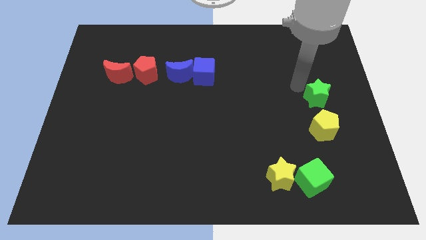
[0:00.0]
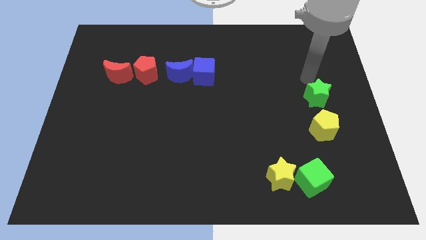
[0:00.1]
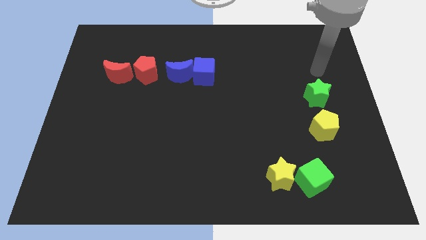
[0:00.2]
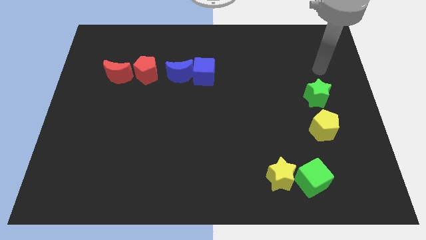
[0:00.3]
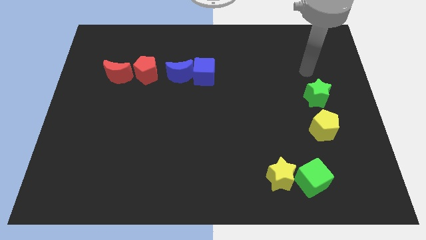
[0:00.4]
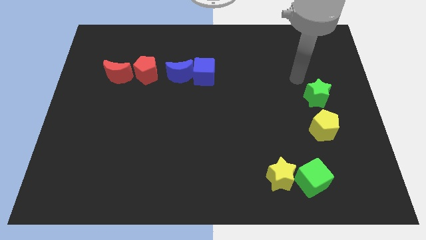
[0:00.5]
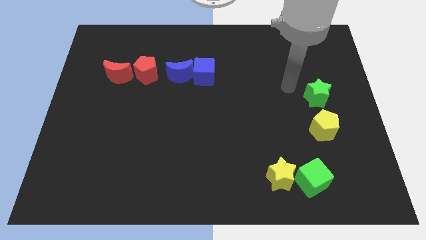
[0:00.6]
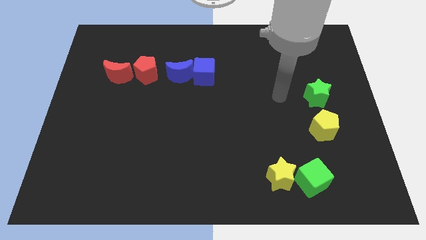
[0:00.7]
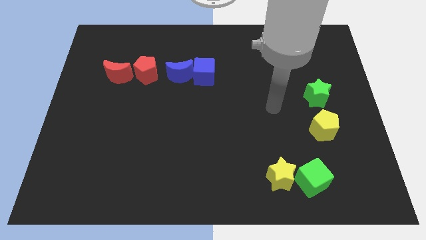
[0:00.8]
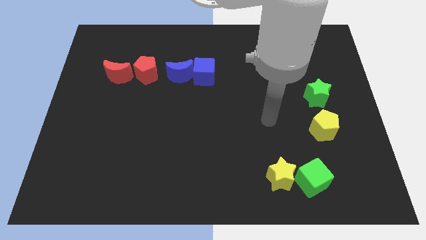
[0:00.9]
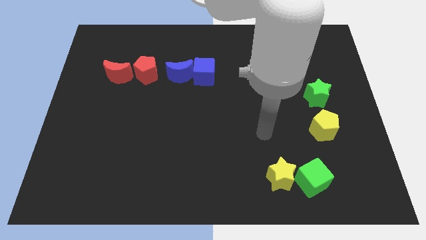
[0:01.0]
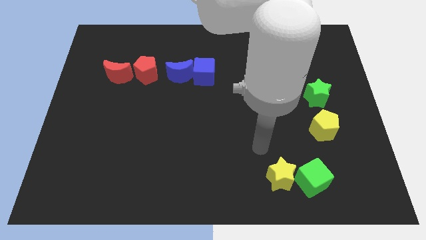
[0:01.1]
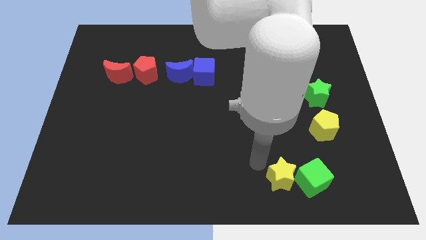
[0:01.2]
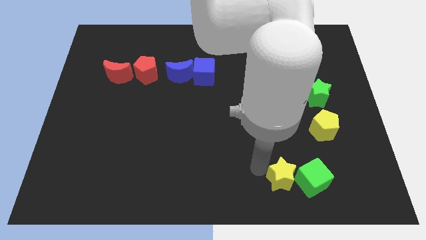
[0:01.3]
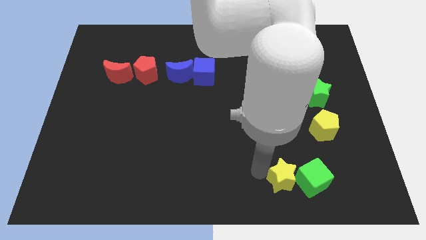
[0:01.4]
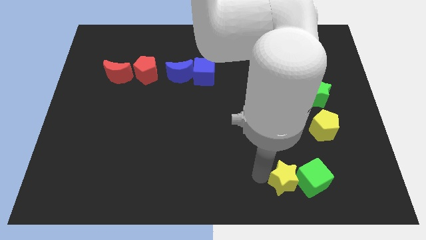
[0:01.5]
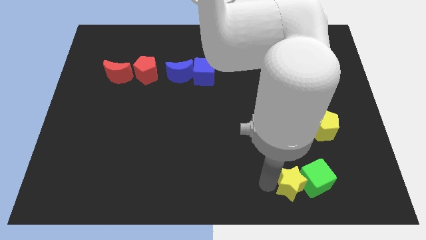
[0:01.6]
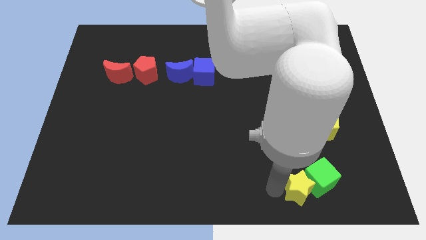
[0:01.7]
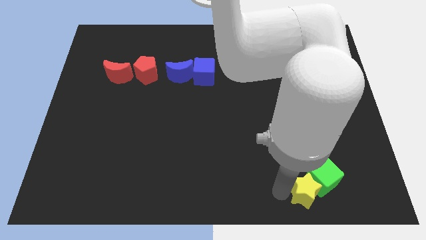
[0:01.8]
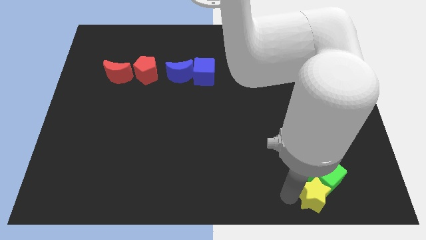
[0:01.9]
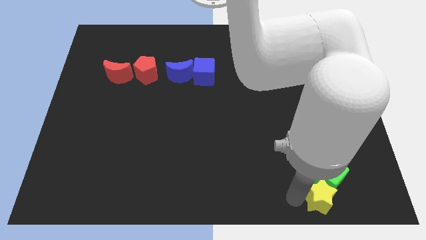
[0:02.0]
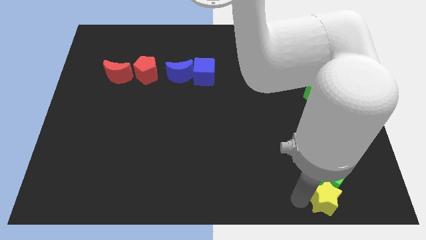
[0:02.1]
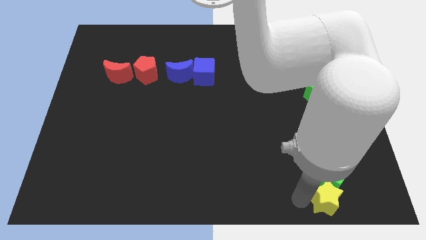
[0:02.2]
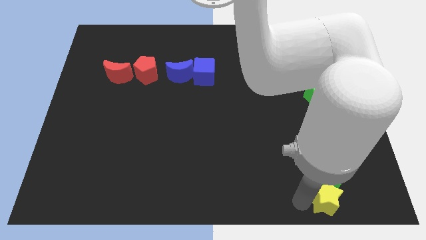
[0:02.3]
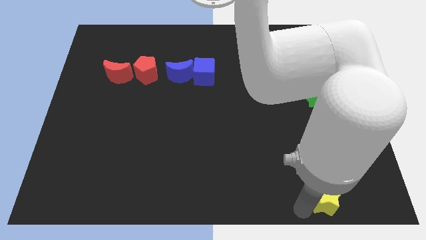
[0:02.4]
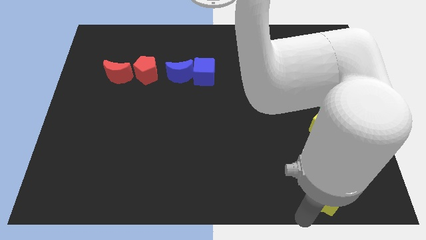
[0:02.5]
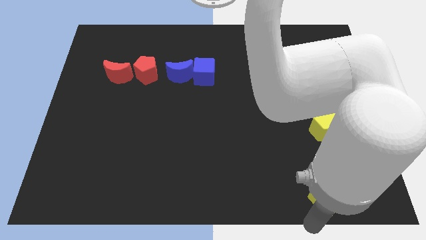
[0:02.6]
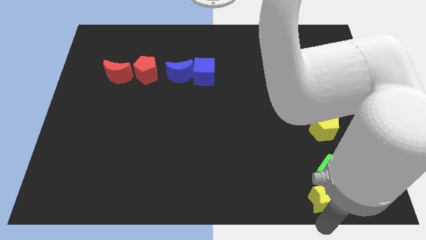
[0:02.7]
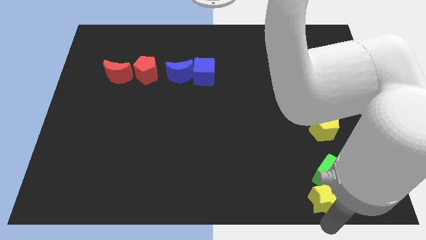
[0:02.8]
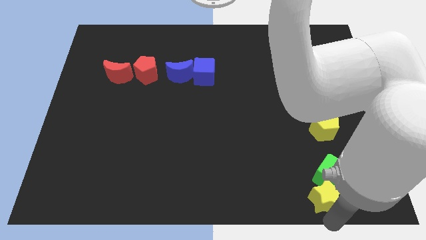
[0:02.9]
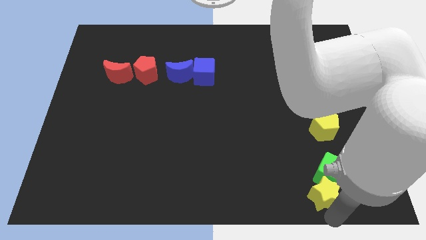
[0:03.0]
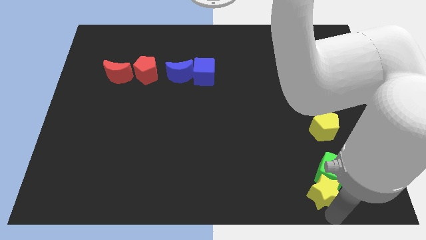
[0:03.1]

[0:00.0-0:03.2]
move the yellow star below the green cube

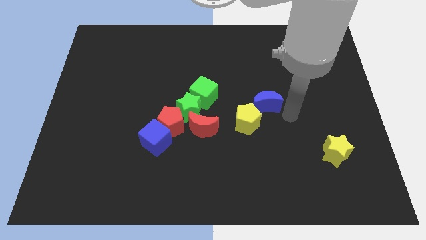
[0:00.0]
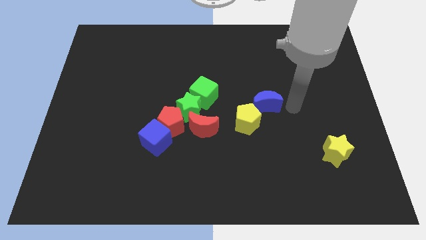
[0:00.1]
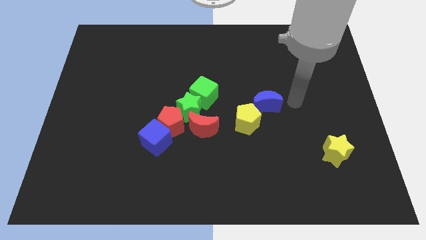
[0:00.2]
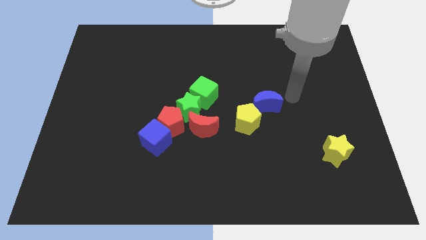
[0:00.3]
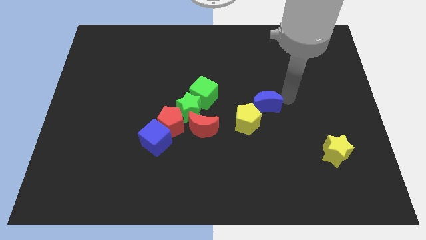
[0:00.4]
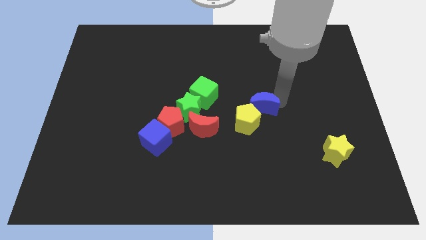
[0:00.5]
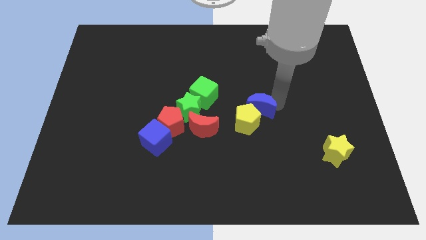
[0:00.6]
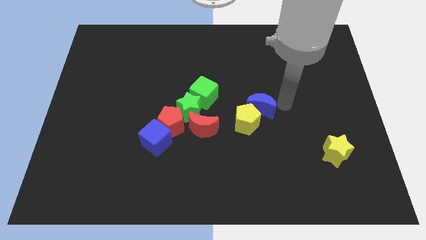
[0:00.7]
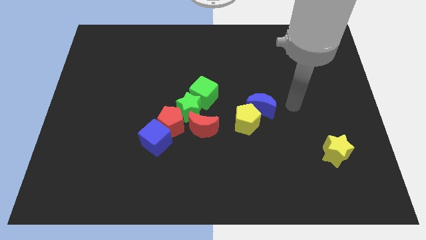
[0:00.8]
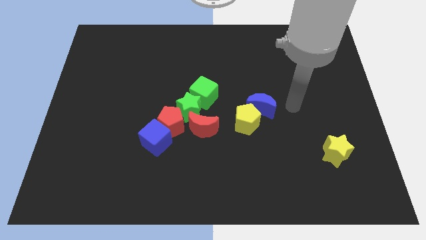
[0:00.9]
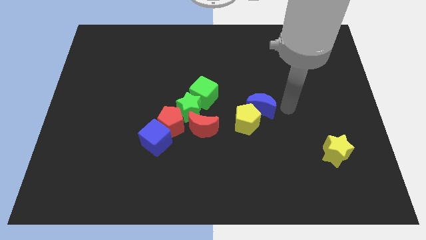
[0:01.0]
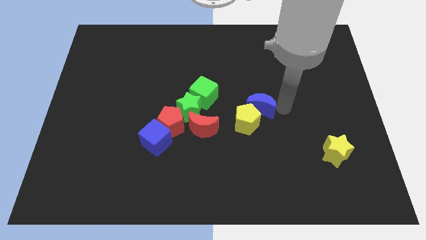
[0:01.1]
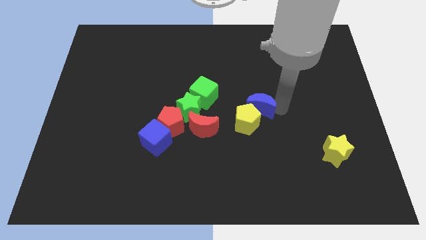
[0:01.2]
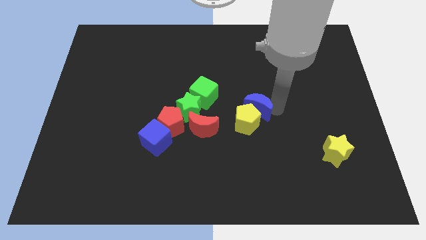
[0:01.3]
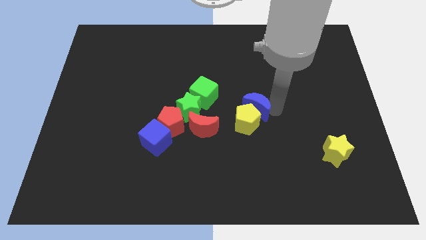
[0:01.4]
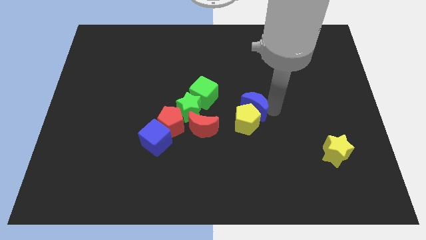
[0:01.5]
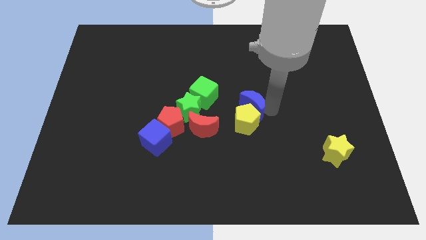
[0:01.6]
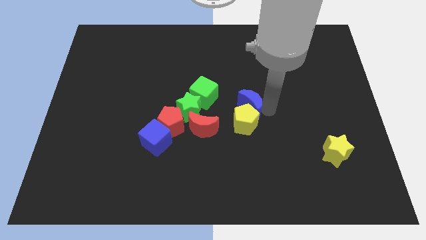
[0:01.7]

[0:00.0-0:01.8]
push the blue moon into the yellow pentagon

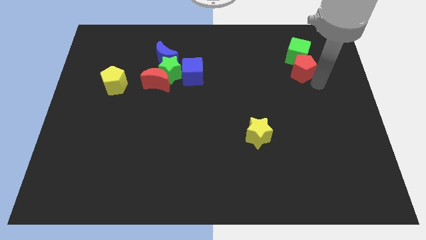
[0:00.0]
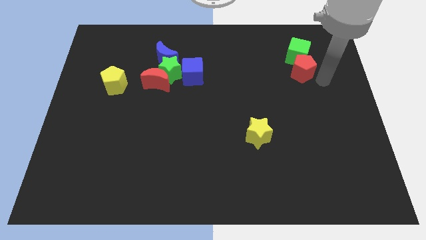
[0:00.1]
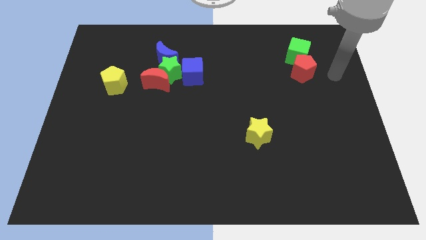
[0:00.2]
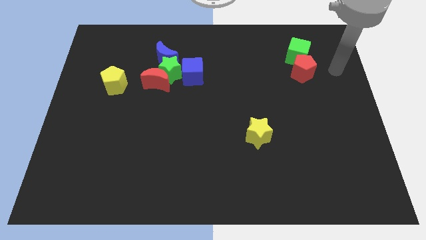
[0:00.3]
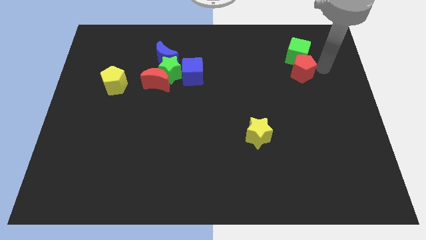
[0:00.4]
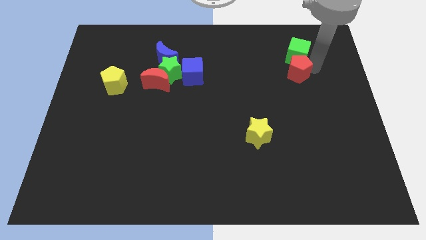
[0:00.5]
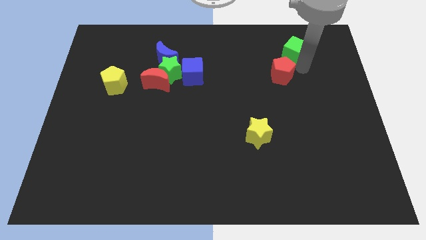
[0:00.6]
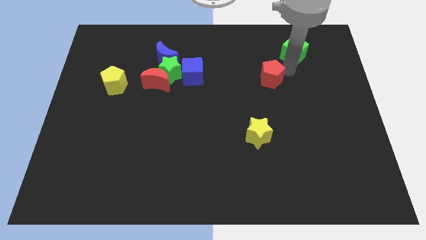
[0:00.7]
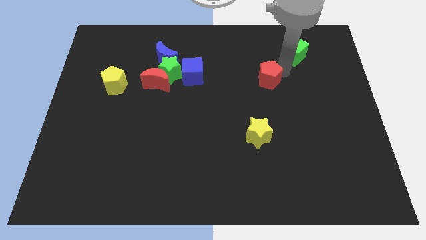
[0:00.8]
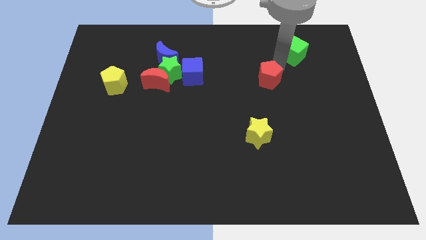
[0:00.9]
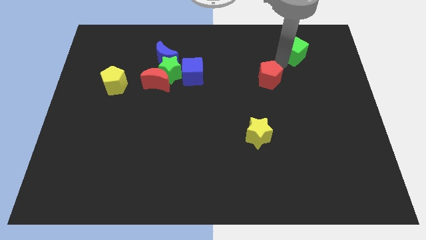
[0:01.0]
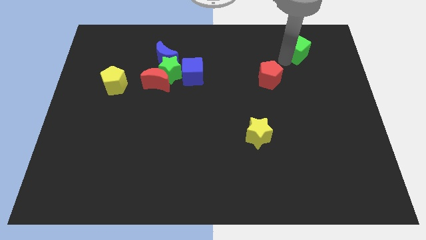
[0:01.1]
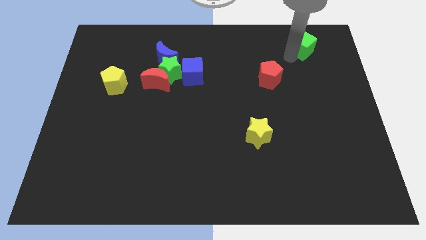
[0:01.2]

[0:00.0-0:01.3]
separate the red pentagon from the green cube

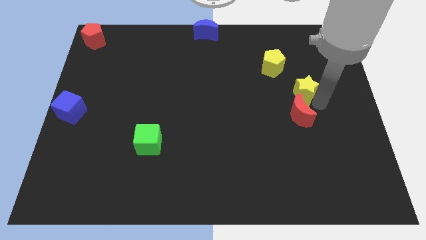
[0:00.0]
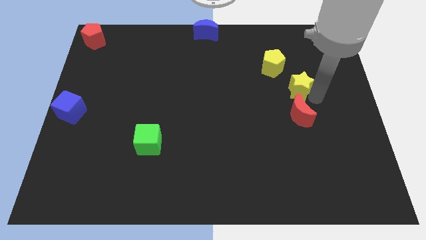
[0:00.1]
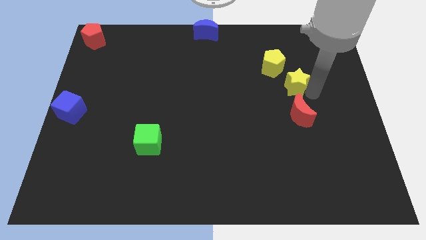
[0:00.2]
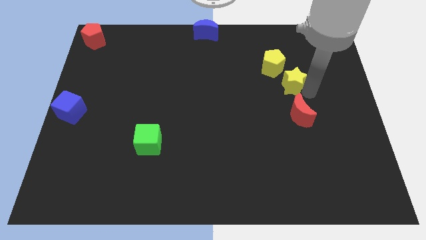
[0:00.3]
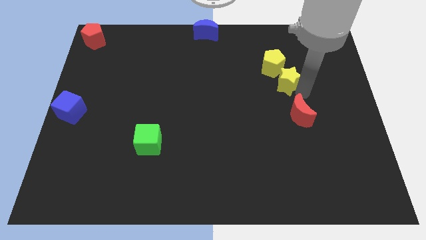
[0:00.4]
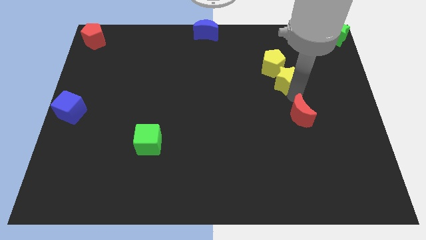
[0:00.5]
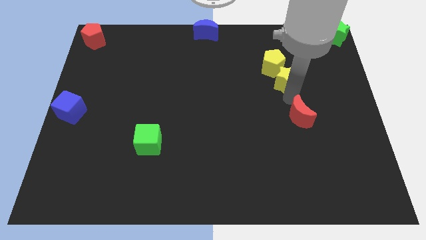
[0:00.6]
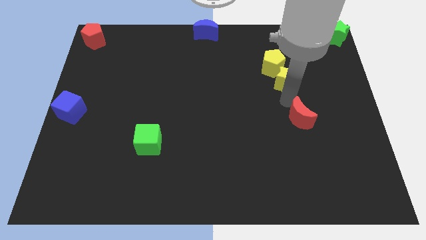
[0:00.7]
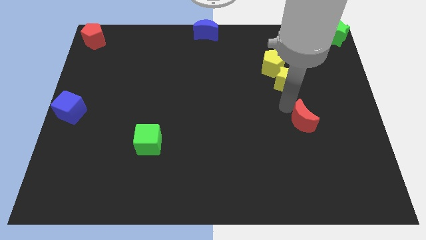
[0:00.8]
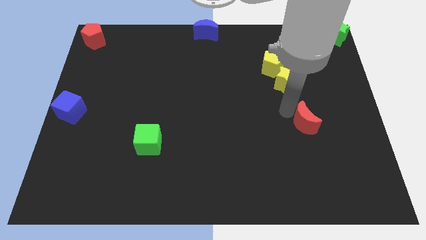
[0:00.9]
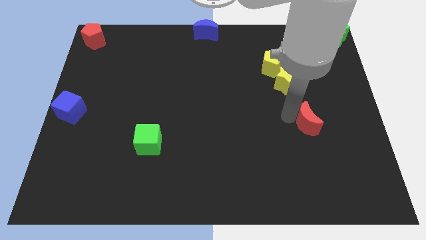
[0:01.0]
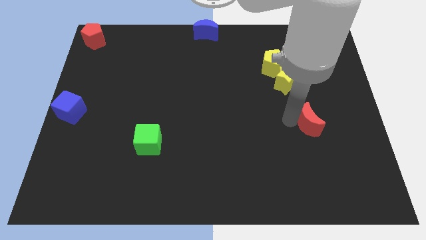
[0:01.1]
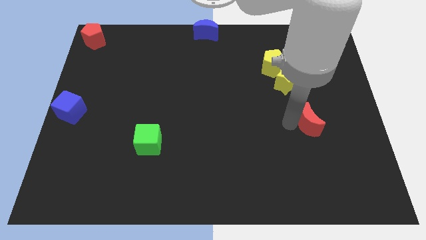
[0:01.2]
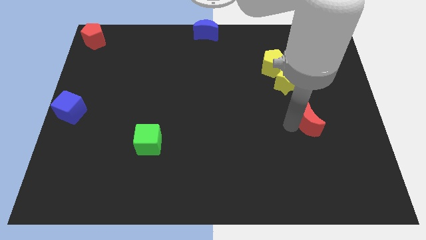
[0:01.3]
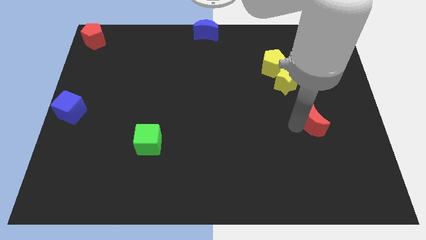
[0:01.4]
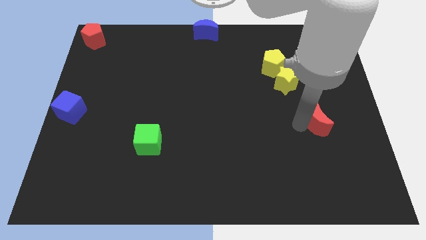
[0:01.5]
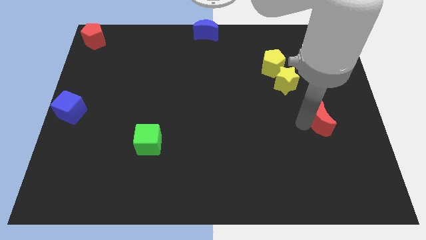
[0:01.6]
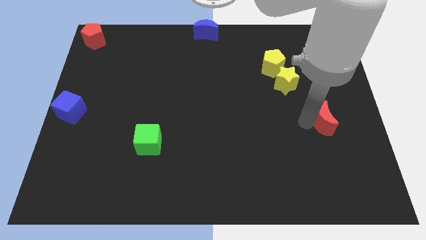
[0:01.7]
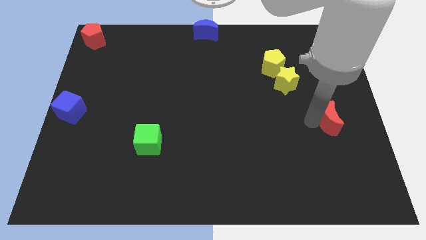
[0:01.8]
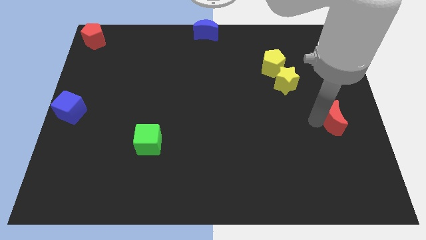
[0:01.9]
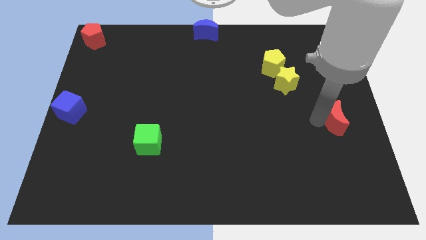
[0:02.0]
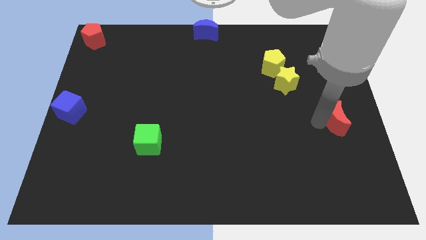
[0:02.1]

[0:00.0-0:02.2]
push yellow star towards the yellow pentagan

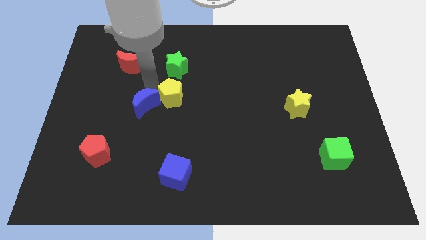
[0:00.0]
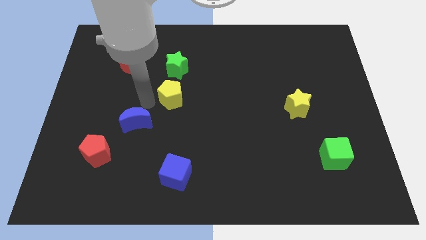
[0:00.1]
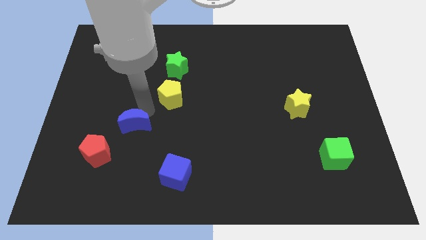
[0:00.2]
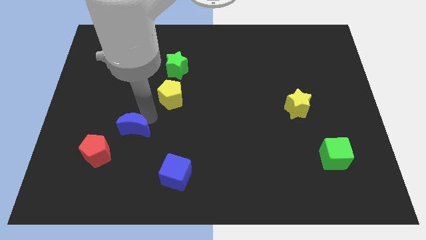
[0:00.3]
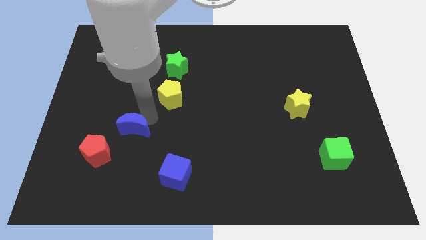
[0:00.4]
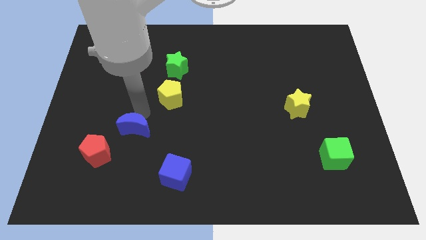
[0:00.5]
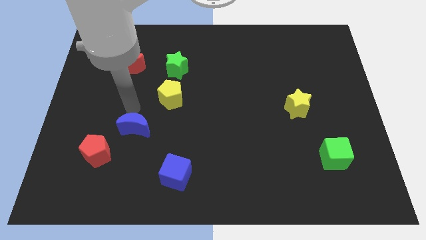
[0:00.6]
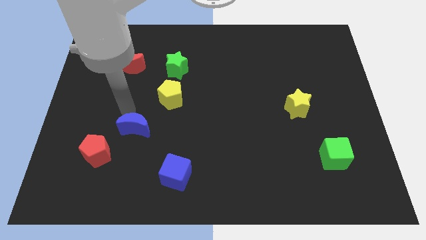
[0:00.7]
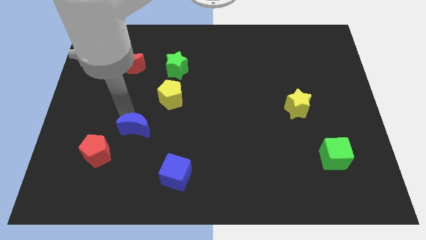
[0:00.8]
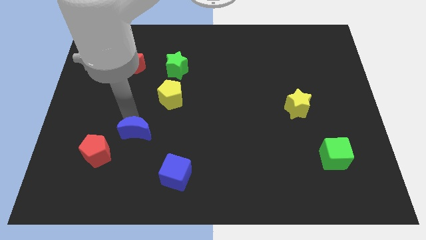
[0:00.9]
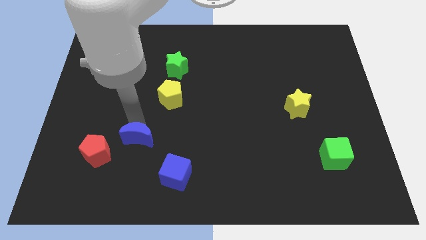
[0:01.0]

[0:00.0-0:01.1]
separate blue moon from yellow pentagon
